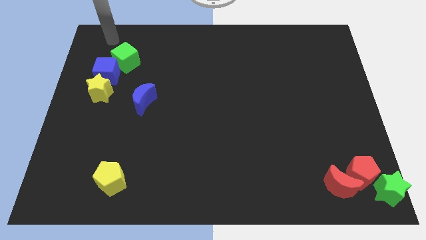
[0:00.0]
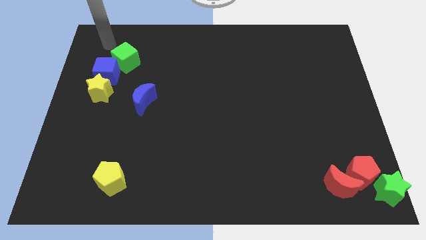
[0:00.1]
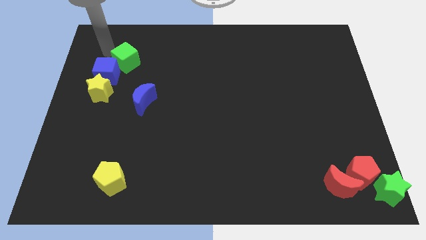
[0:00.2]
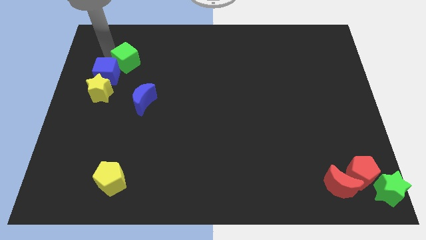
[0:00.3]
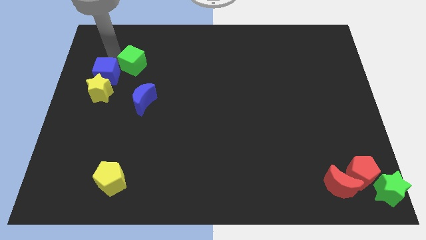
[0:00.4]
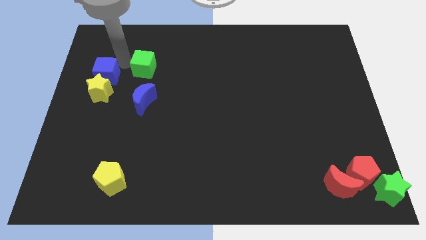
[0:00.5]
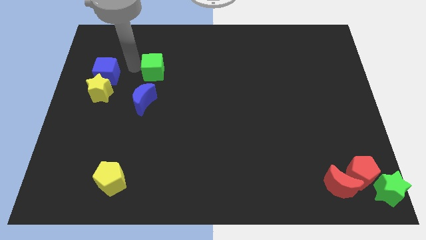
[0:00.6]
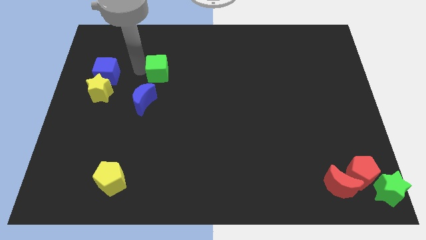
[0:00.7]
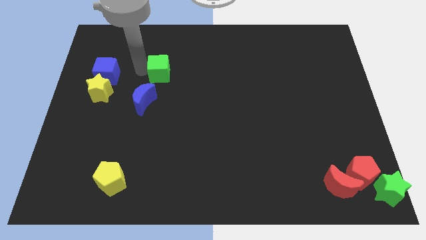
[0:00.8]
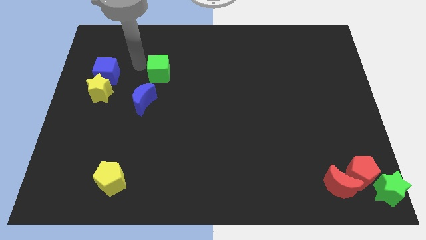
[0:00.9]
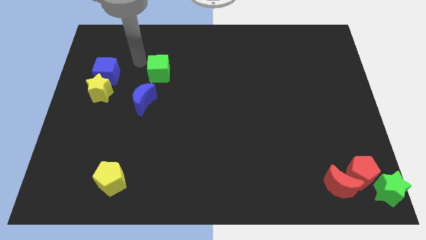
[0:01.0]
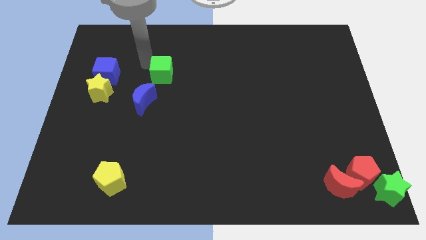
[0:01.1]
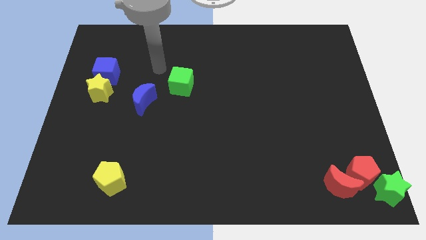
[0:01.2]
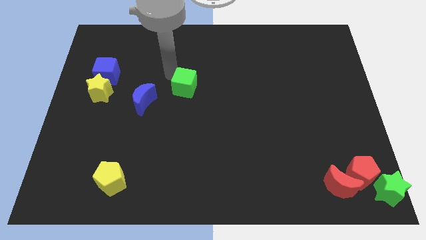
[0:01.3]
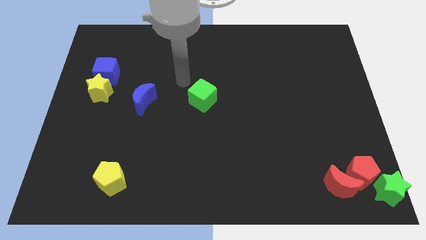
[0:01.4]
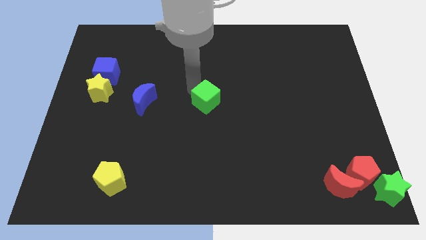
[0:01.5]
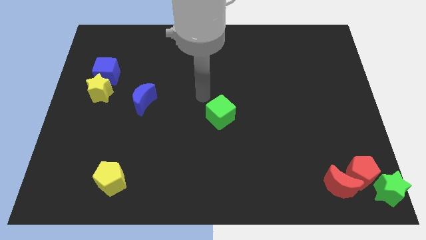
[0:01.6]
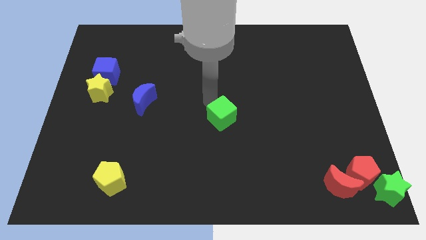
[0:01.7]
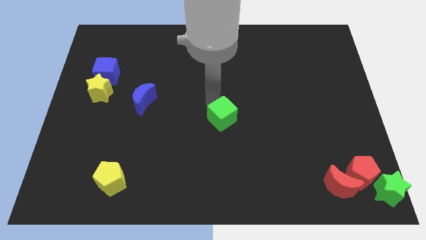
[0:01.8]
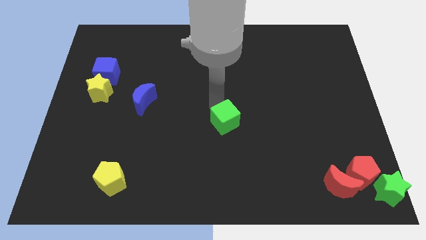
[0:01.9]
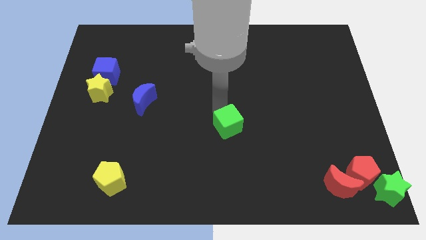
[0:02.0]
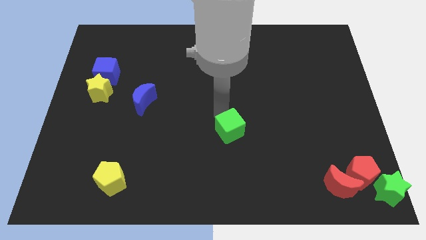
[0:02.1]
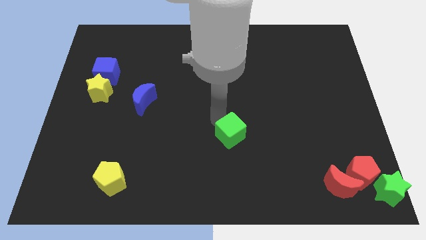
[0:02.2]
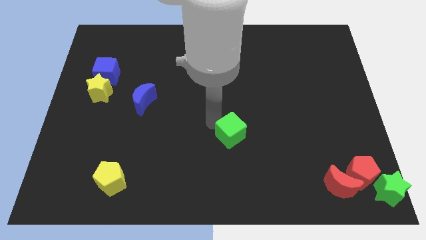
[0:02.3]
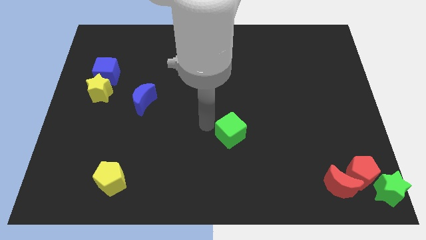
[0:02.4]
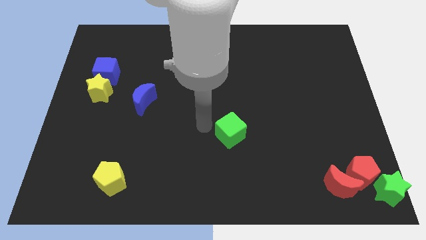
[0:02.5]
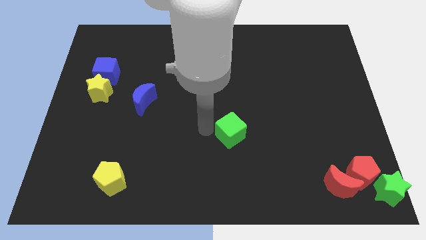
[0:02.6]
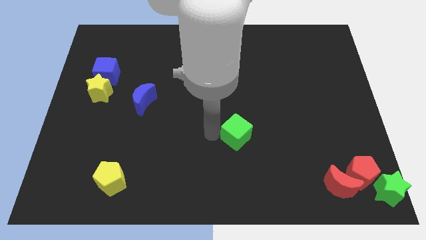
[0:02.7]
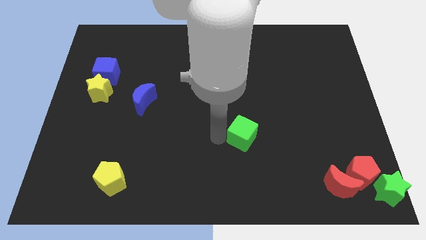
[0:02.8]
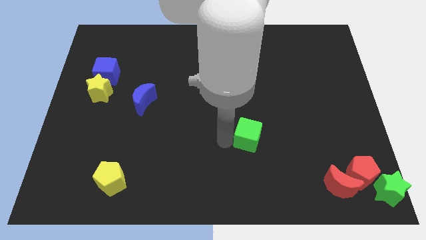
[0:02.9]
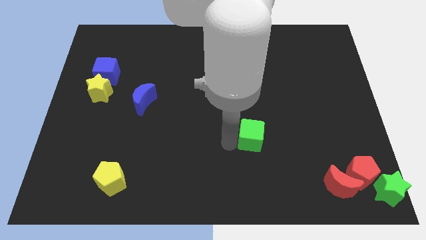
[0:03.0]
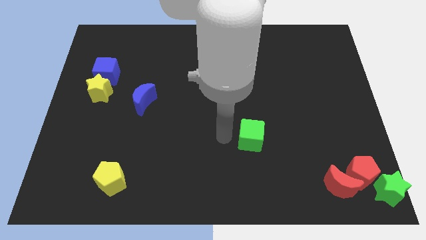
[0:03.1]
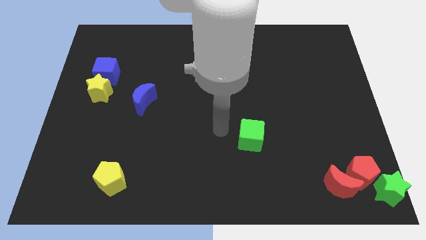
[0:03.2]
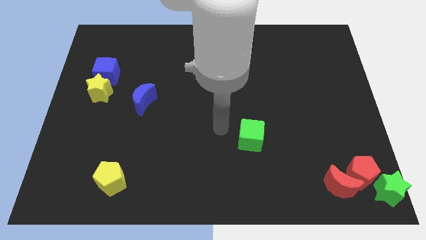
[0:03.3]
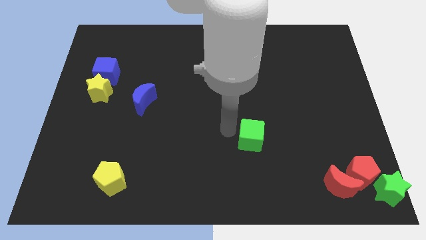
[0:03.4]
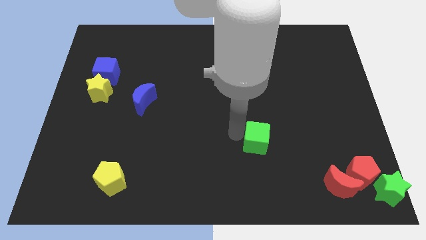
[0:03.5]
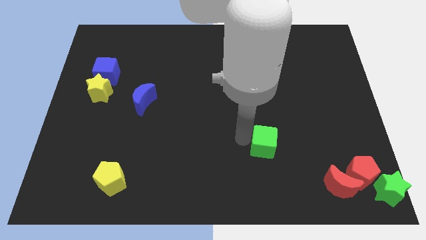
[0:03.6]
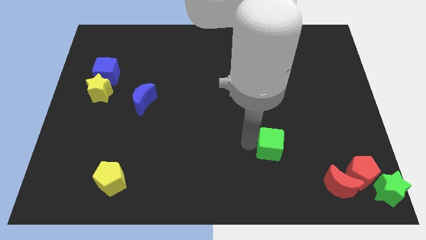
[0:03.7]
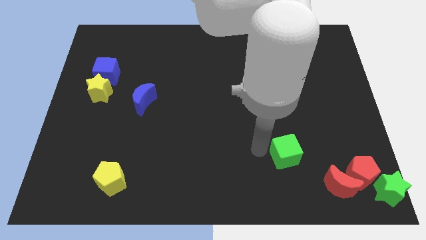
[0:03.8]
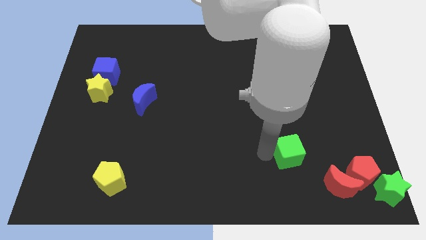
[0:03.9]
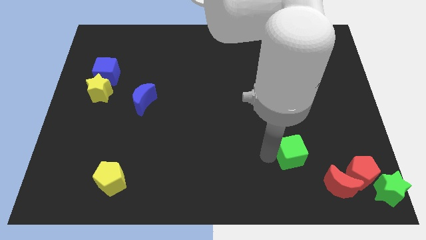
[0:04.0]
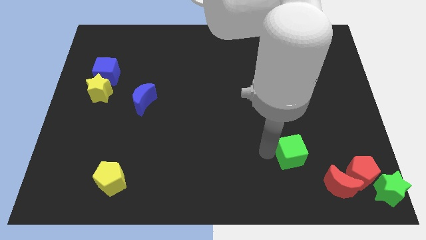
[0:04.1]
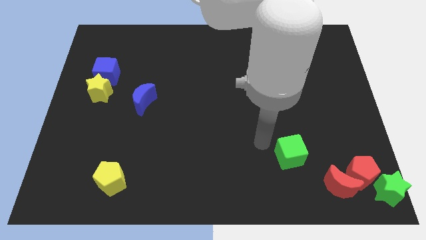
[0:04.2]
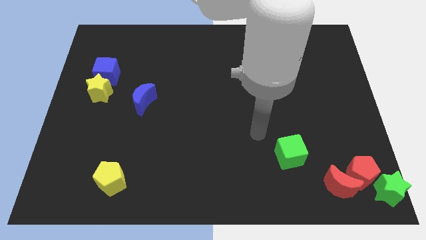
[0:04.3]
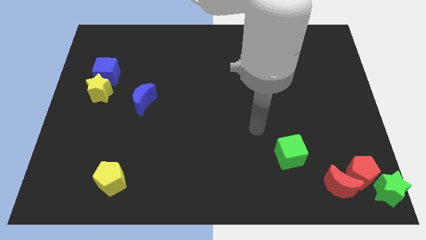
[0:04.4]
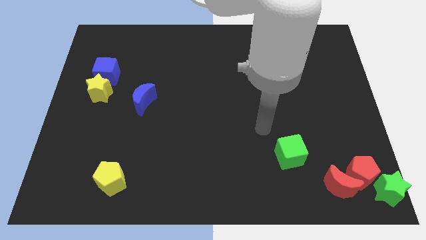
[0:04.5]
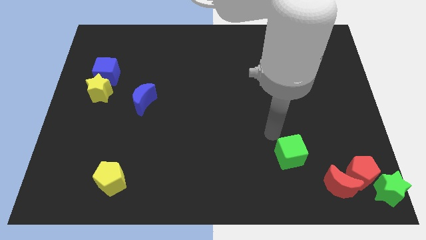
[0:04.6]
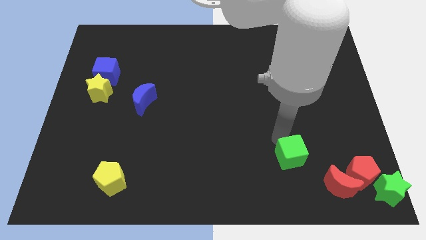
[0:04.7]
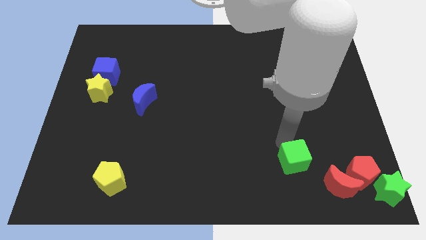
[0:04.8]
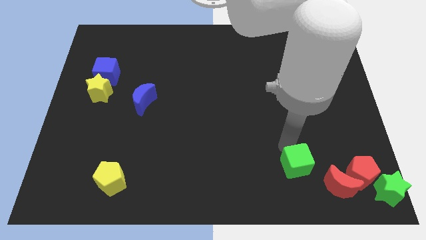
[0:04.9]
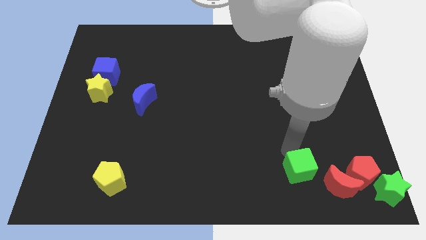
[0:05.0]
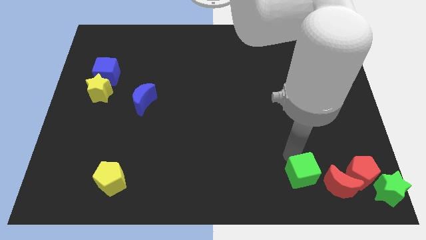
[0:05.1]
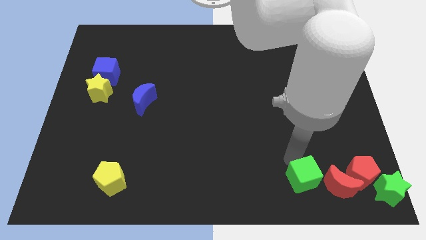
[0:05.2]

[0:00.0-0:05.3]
place the green cube to the right of the yellow pentagon

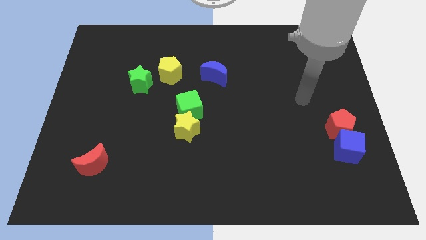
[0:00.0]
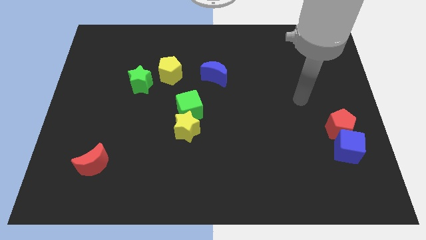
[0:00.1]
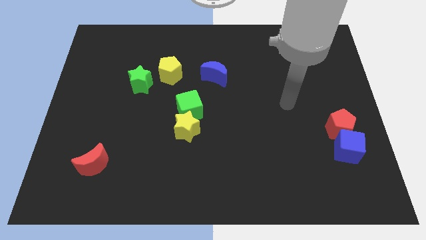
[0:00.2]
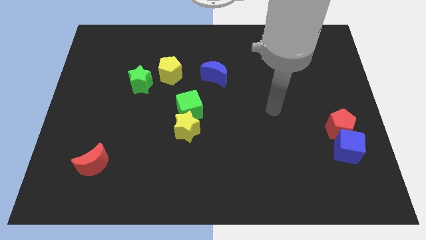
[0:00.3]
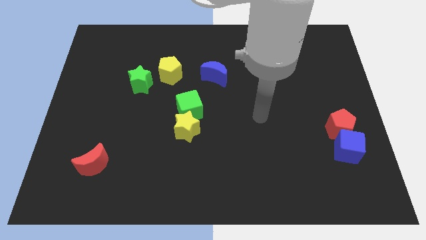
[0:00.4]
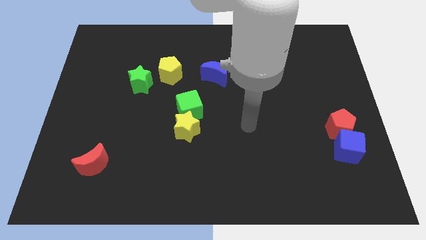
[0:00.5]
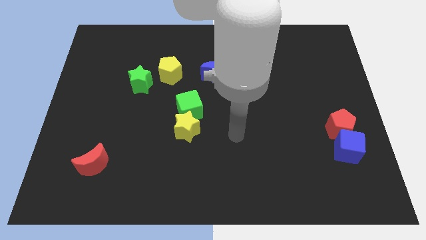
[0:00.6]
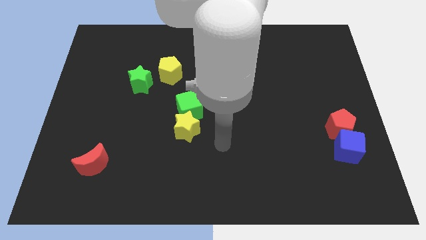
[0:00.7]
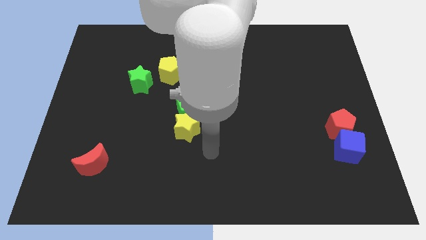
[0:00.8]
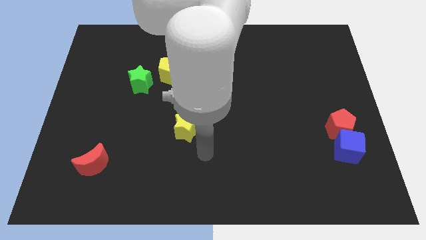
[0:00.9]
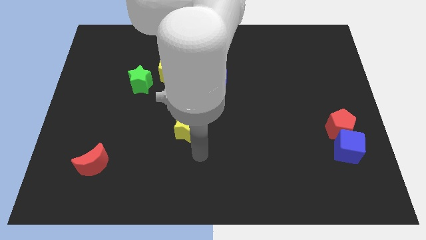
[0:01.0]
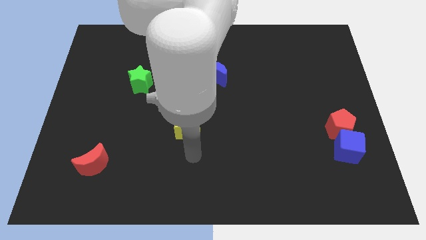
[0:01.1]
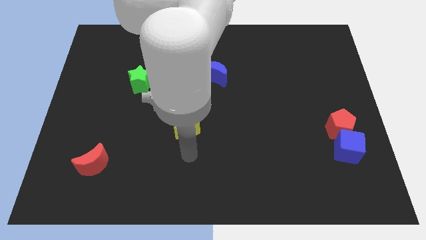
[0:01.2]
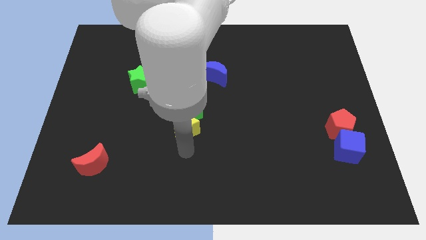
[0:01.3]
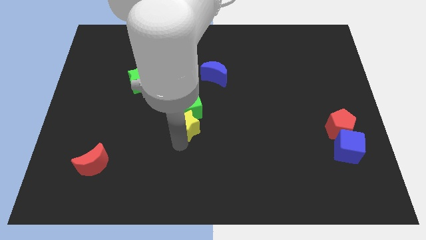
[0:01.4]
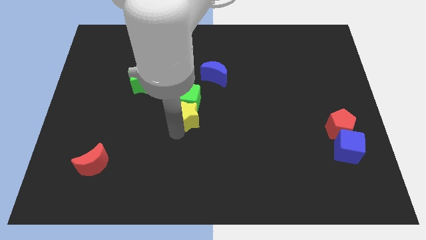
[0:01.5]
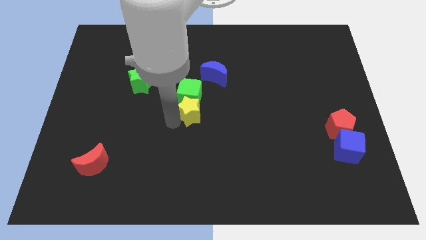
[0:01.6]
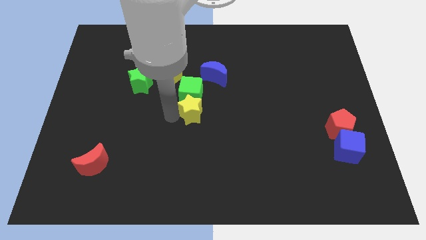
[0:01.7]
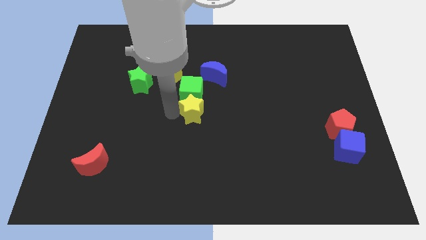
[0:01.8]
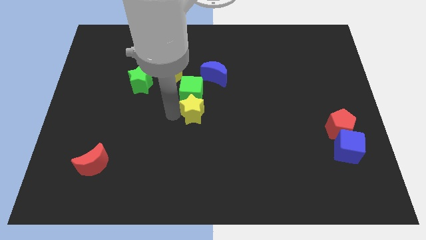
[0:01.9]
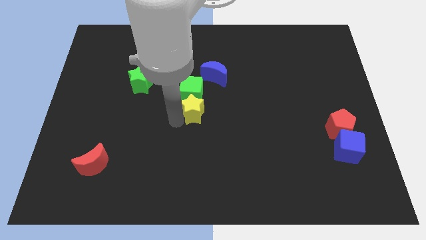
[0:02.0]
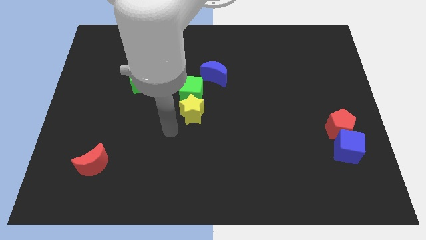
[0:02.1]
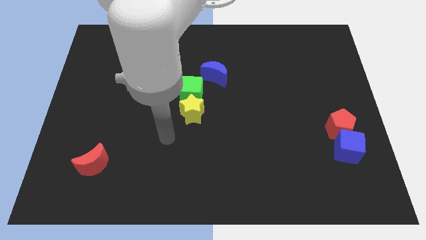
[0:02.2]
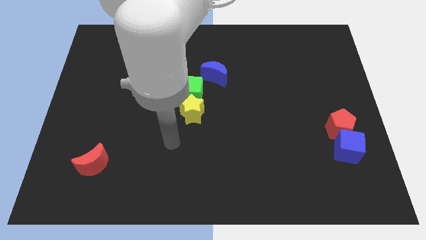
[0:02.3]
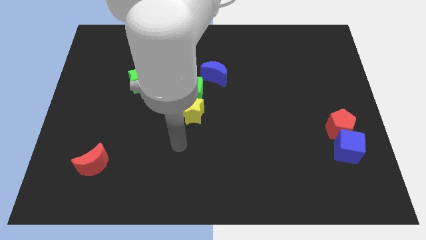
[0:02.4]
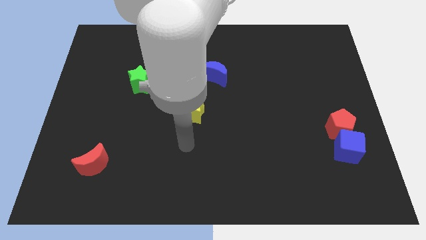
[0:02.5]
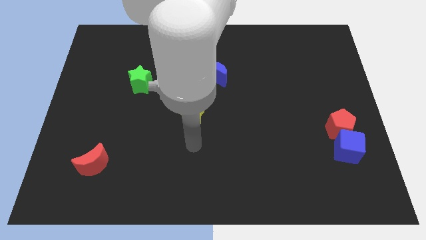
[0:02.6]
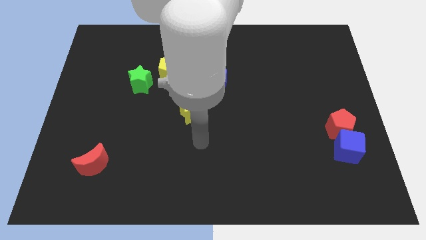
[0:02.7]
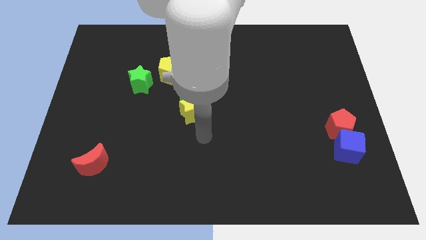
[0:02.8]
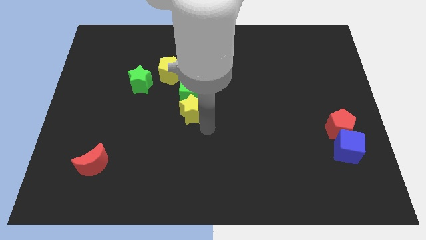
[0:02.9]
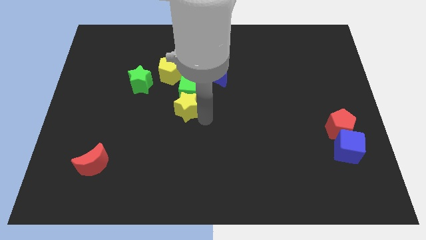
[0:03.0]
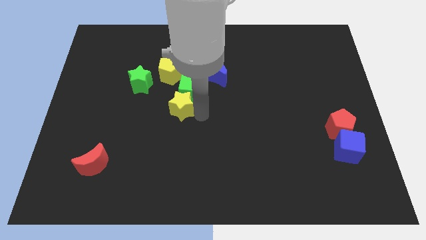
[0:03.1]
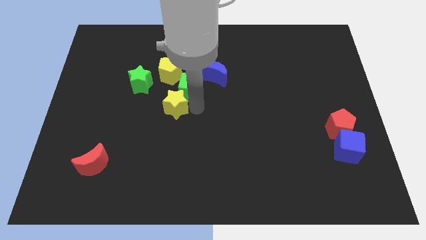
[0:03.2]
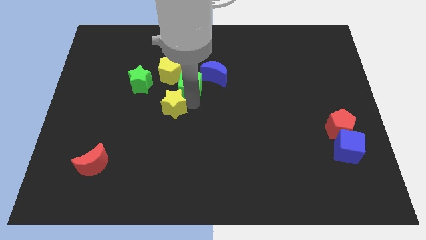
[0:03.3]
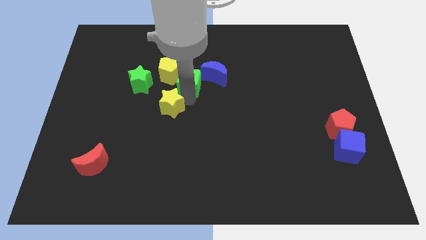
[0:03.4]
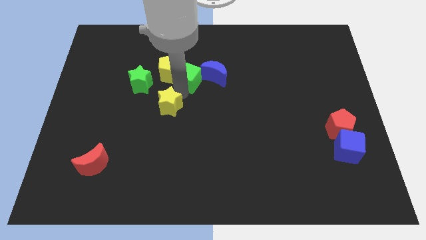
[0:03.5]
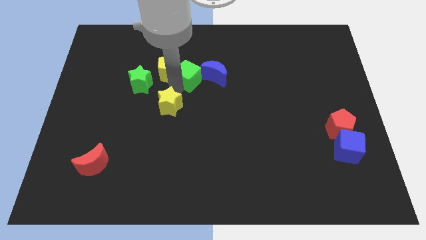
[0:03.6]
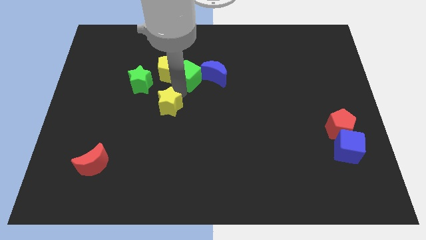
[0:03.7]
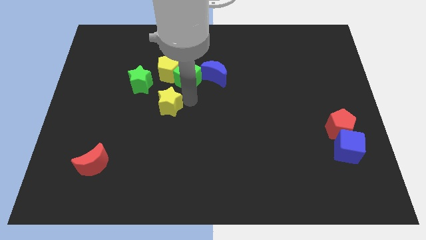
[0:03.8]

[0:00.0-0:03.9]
separate the yellow star and green cube
